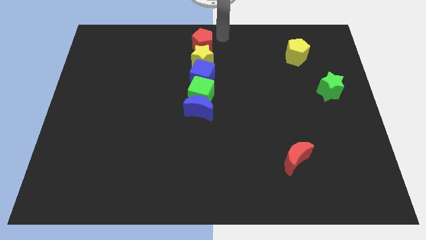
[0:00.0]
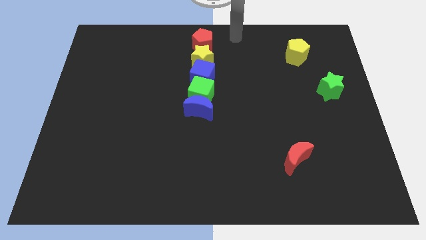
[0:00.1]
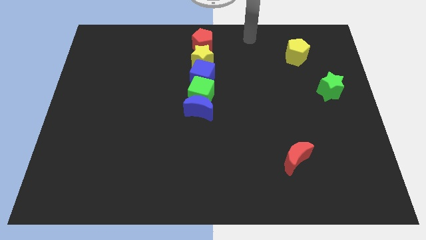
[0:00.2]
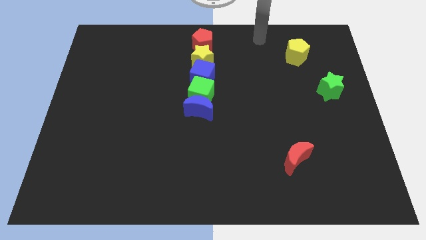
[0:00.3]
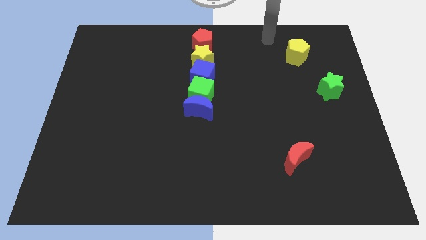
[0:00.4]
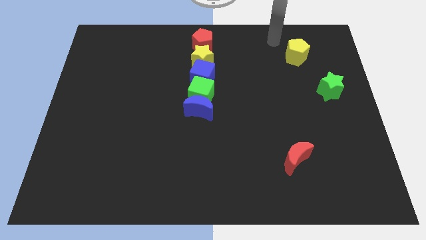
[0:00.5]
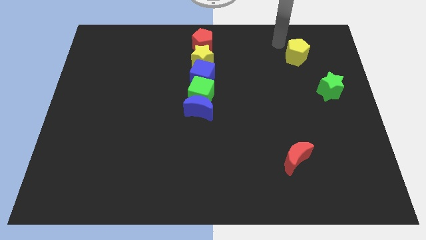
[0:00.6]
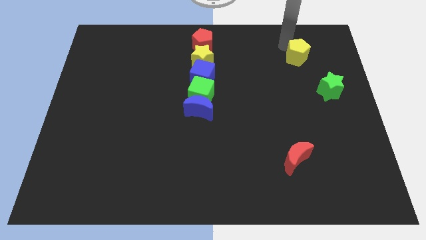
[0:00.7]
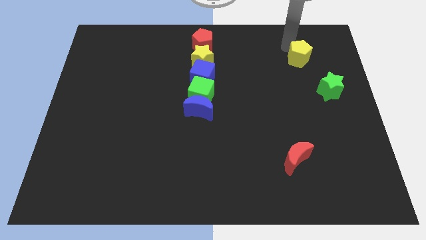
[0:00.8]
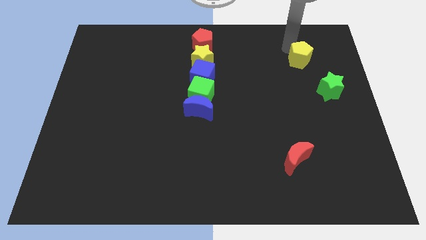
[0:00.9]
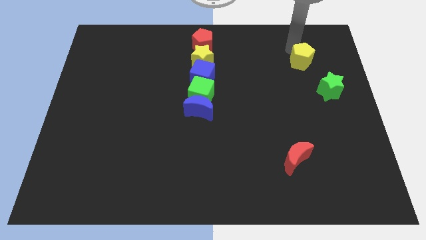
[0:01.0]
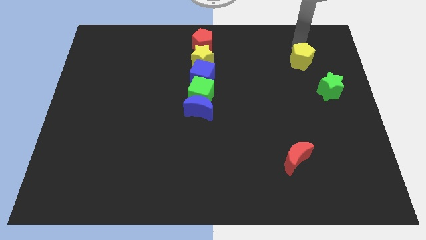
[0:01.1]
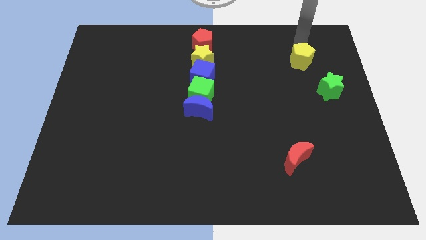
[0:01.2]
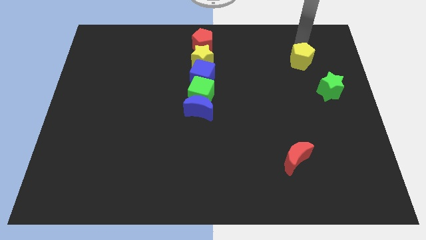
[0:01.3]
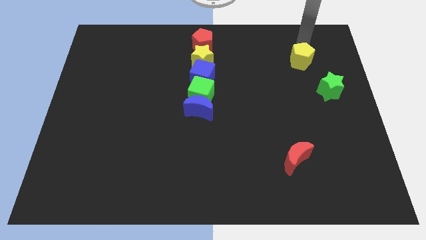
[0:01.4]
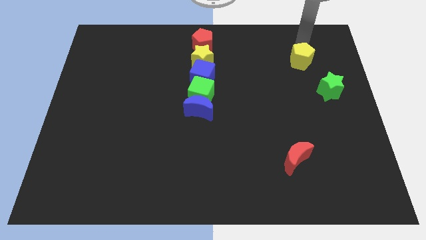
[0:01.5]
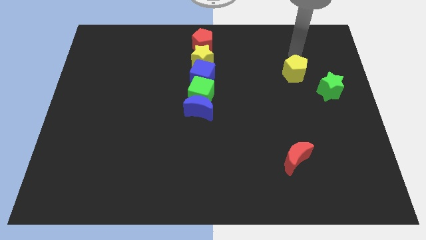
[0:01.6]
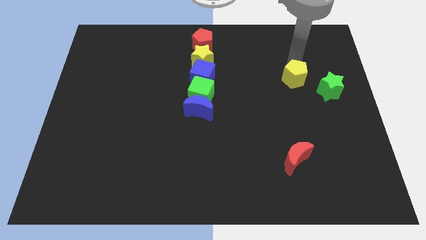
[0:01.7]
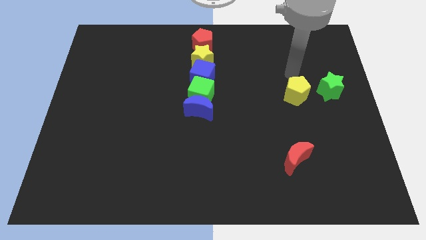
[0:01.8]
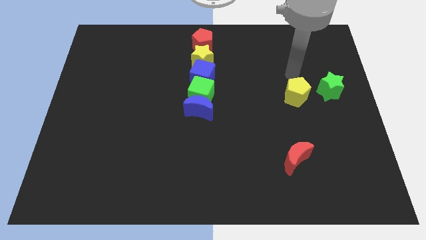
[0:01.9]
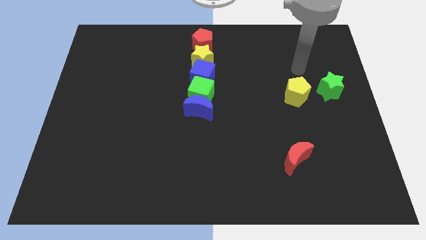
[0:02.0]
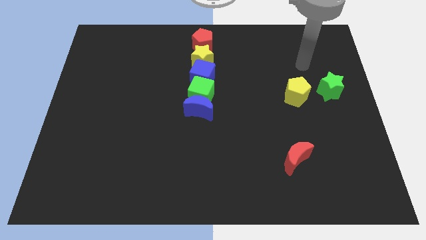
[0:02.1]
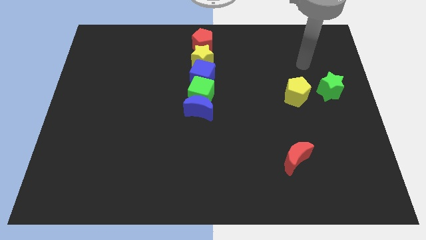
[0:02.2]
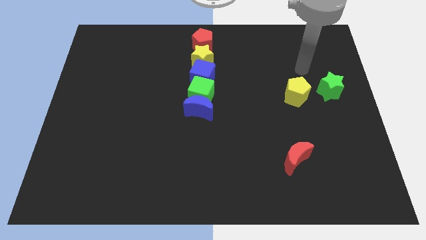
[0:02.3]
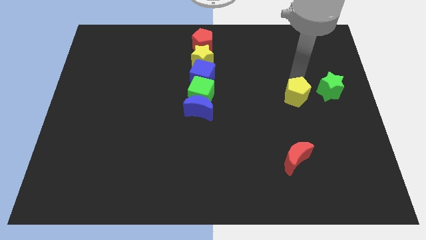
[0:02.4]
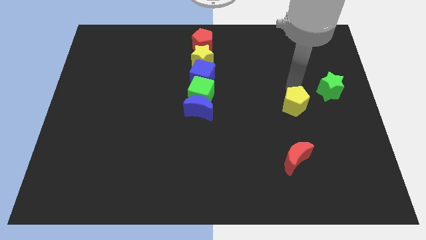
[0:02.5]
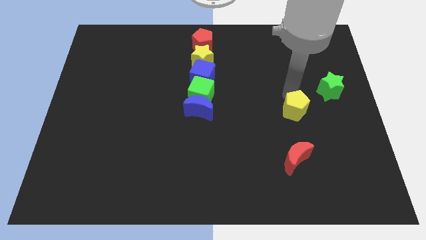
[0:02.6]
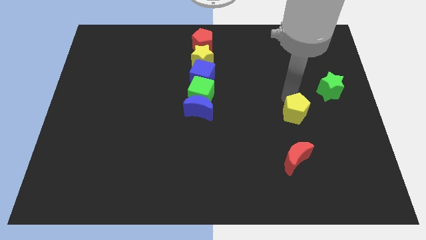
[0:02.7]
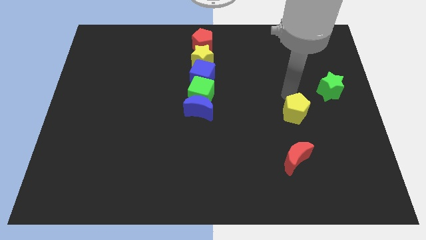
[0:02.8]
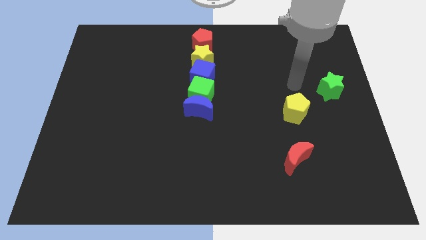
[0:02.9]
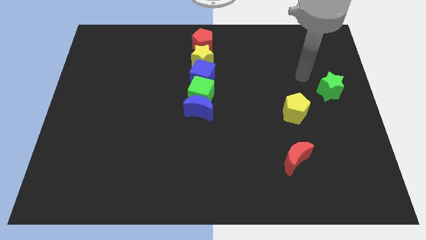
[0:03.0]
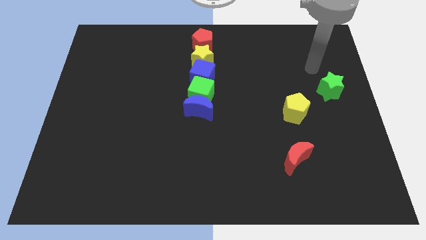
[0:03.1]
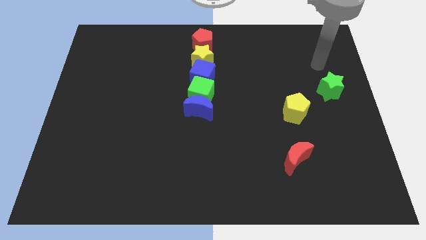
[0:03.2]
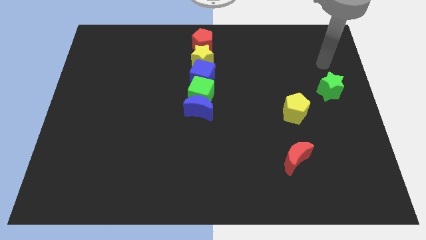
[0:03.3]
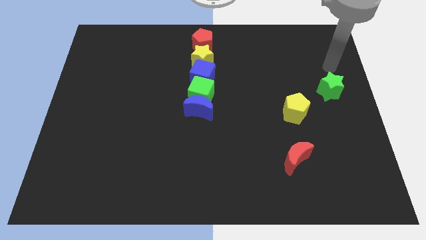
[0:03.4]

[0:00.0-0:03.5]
push the yellow pentagon towards the red moon

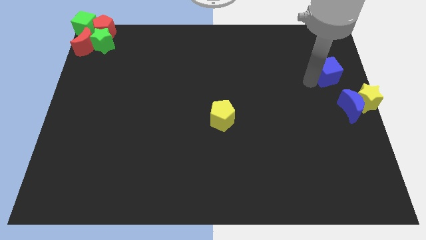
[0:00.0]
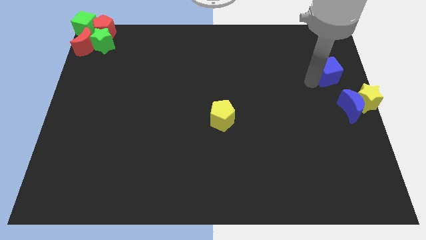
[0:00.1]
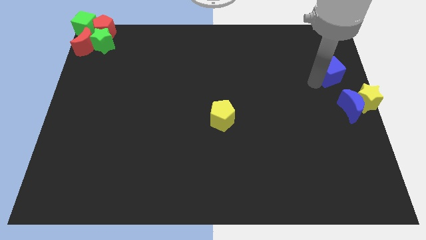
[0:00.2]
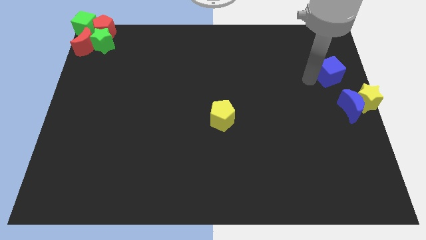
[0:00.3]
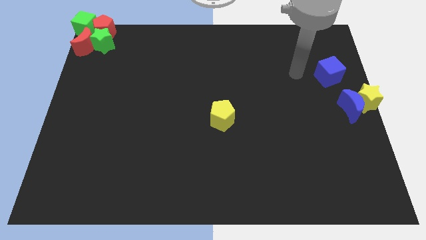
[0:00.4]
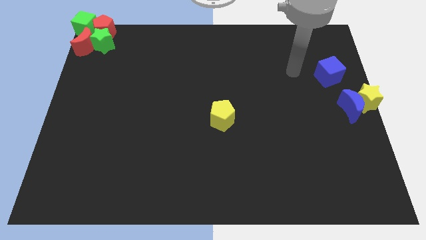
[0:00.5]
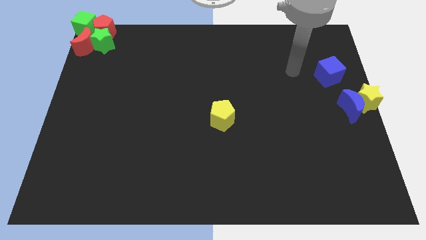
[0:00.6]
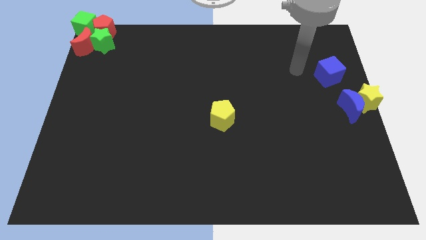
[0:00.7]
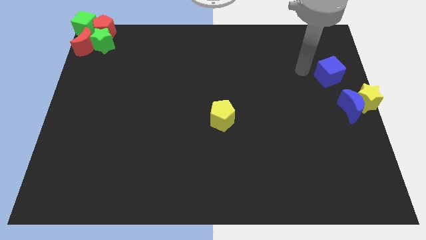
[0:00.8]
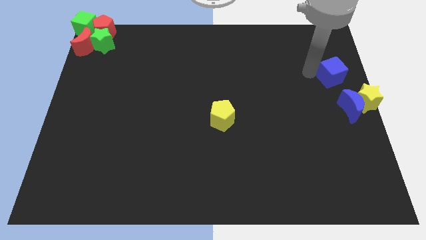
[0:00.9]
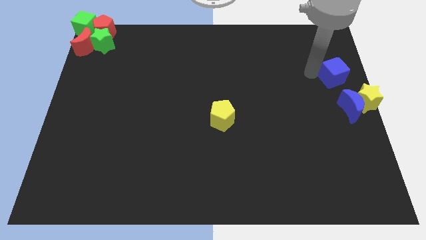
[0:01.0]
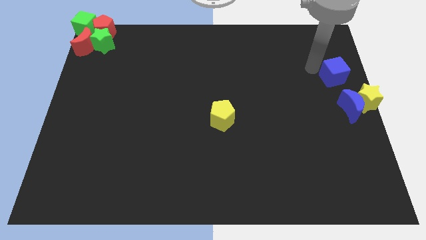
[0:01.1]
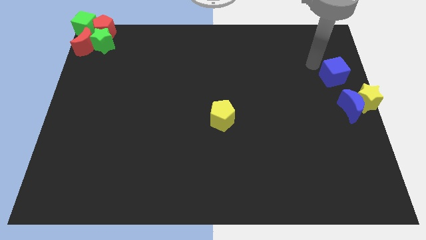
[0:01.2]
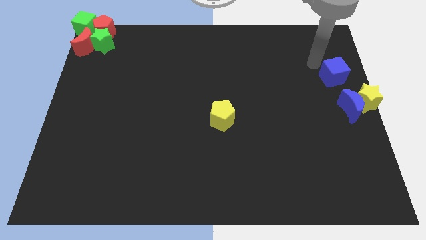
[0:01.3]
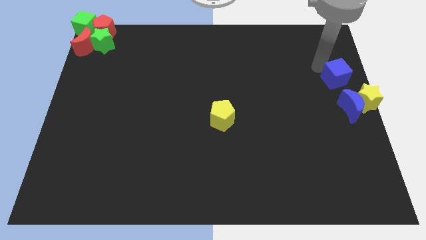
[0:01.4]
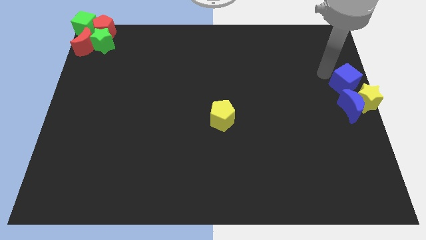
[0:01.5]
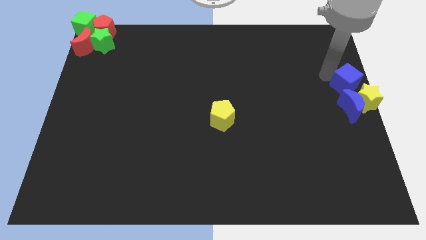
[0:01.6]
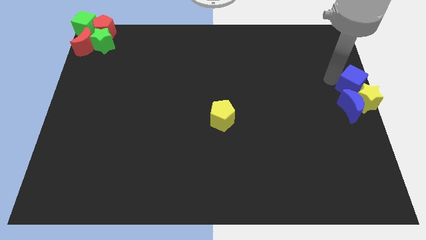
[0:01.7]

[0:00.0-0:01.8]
add blue cube to the blue moon and yellow star

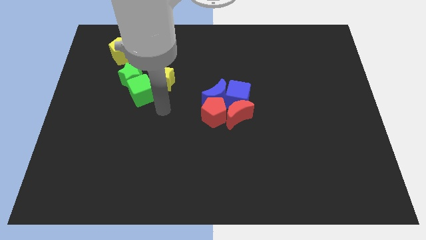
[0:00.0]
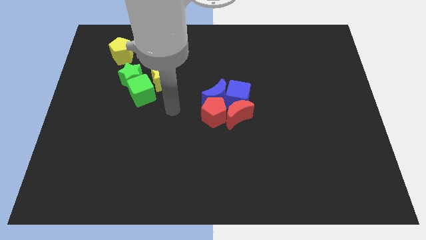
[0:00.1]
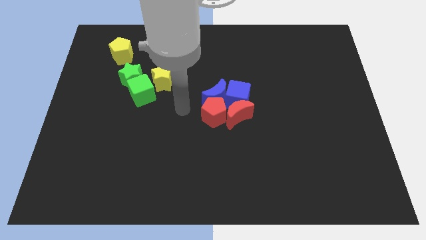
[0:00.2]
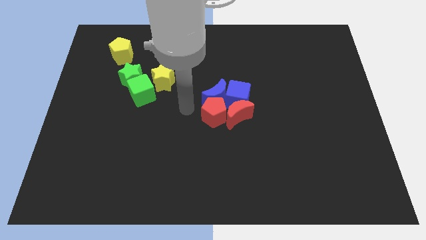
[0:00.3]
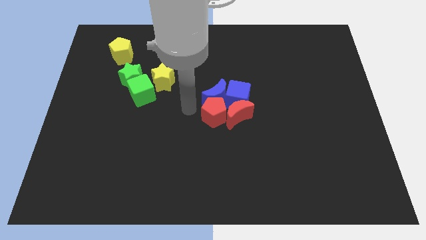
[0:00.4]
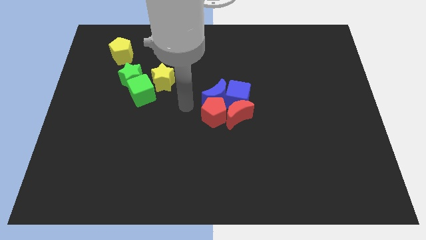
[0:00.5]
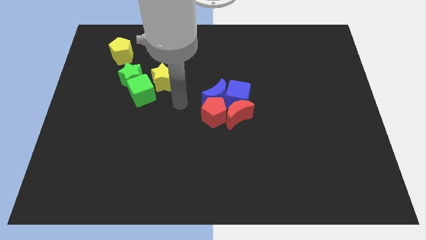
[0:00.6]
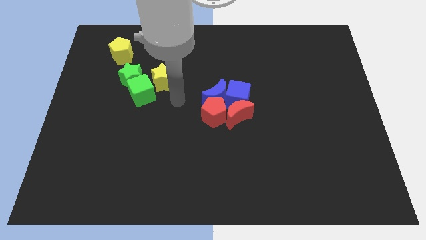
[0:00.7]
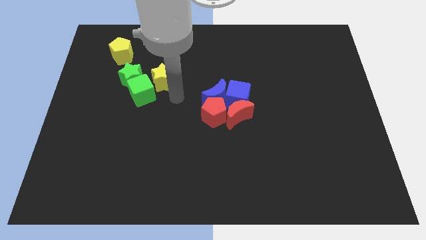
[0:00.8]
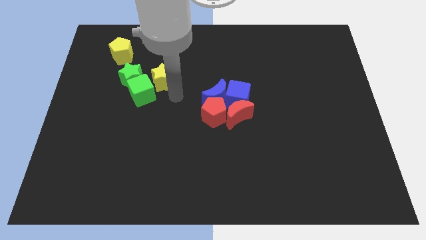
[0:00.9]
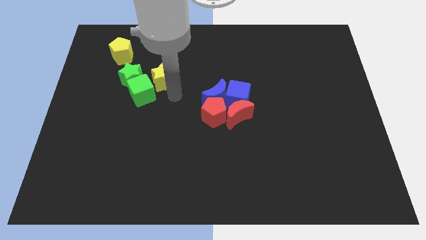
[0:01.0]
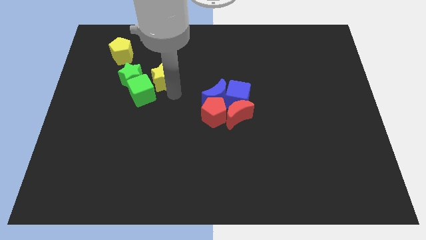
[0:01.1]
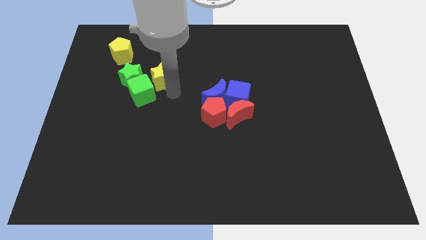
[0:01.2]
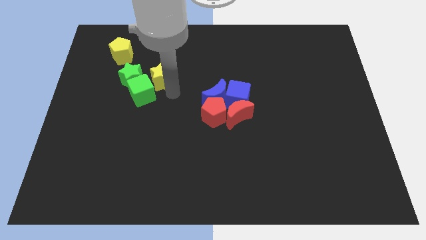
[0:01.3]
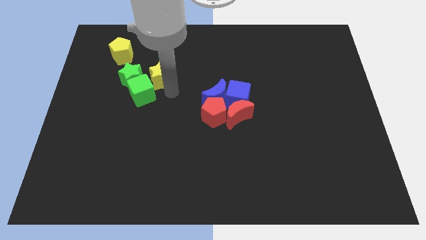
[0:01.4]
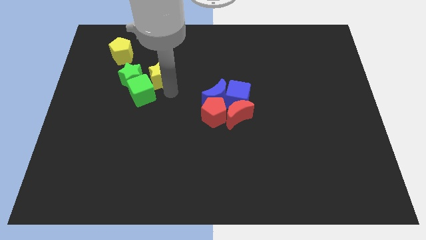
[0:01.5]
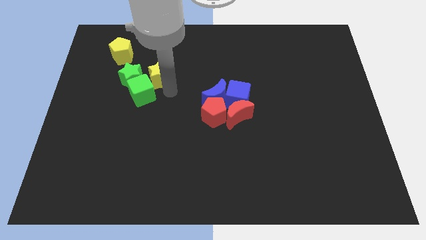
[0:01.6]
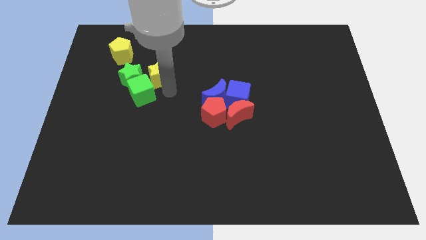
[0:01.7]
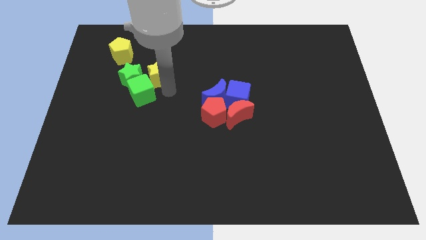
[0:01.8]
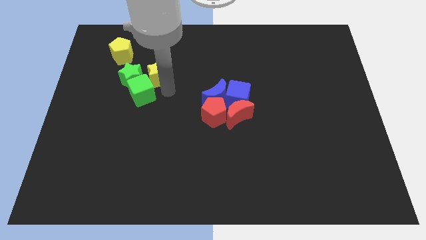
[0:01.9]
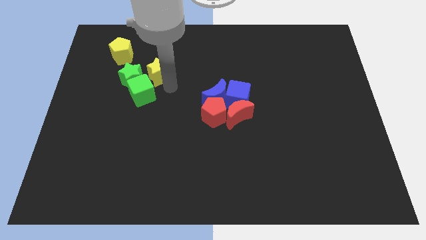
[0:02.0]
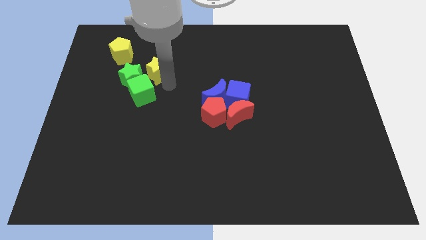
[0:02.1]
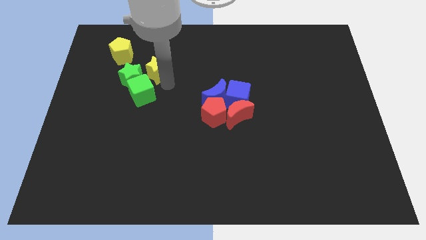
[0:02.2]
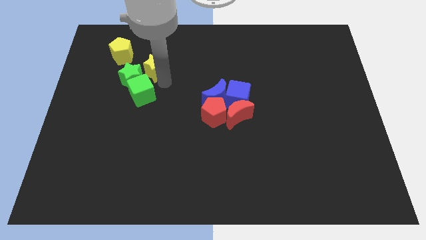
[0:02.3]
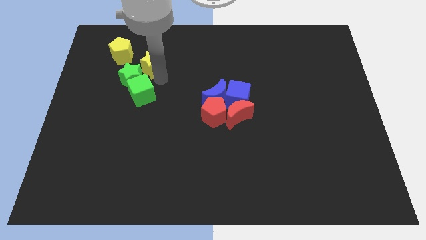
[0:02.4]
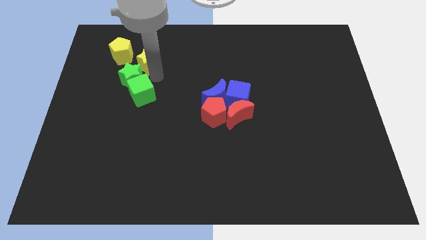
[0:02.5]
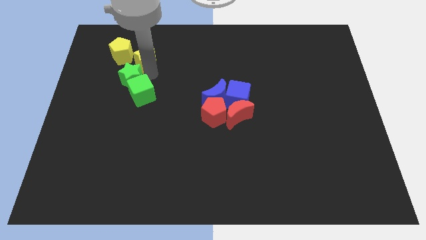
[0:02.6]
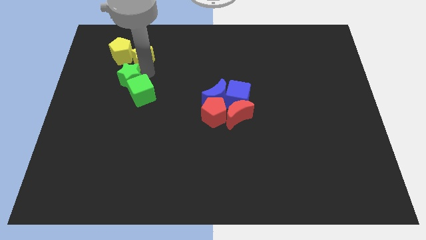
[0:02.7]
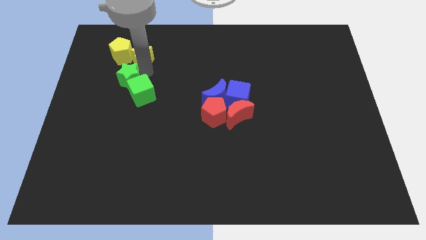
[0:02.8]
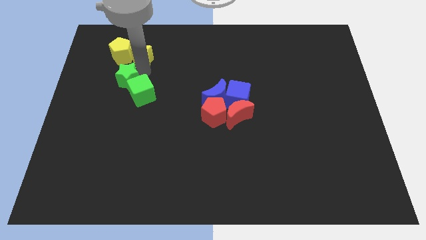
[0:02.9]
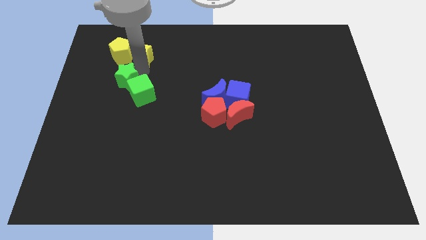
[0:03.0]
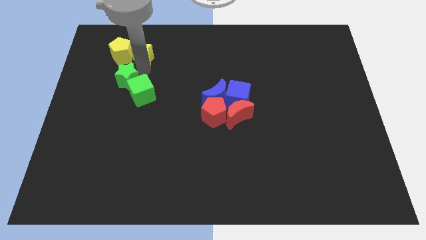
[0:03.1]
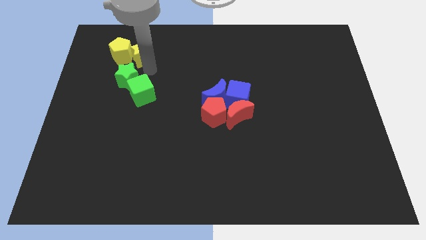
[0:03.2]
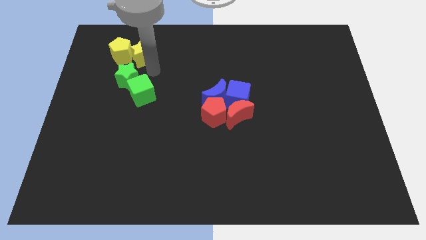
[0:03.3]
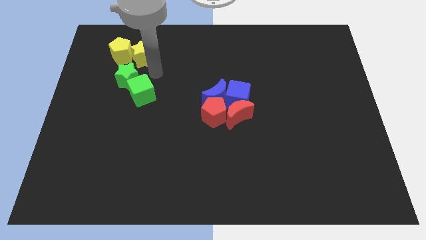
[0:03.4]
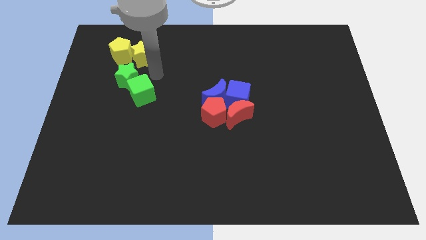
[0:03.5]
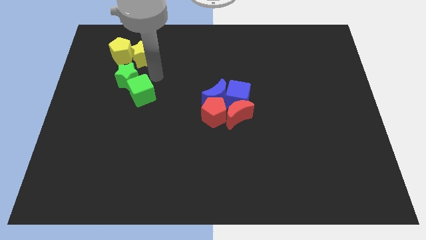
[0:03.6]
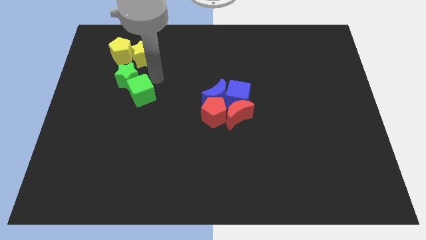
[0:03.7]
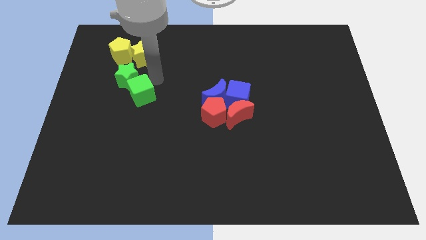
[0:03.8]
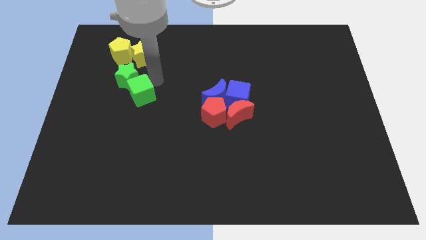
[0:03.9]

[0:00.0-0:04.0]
push the yellow star to the right of the yellow pentagon
